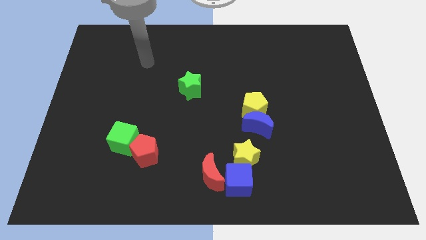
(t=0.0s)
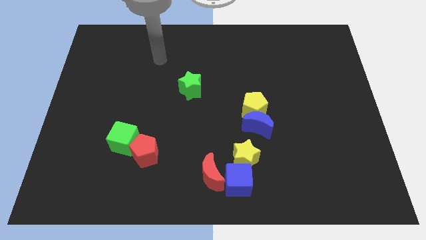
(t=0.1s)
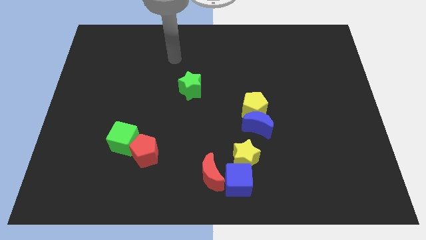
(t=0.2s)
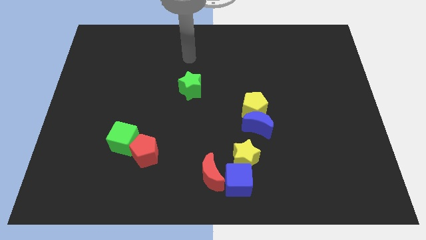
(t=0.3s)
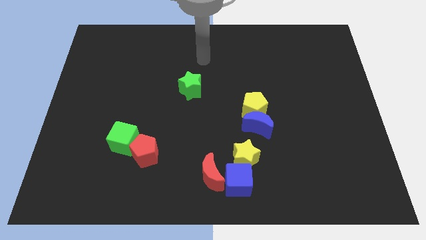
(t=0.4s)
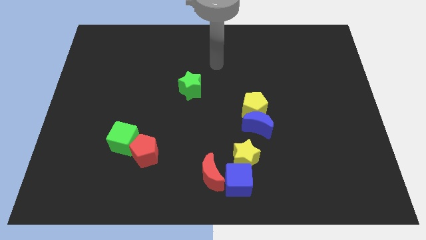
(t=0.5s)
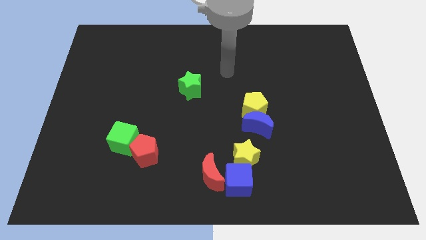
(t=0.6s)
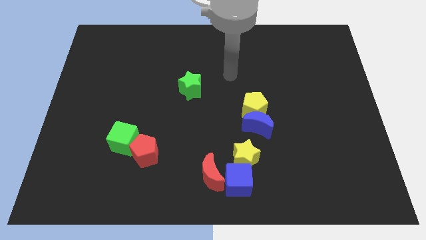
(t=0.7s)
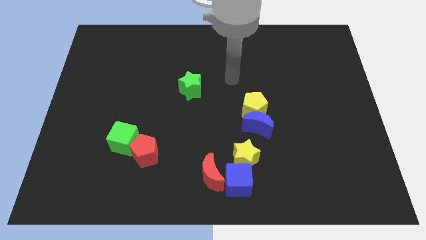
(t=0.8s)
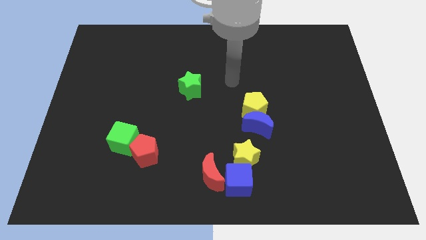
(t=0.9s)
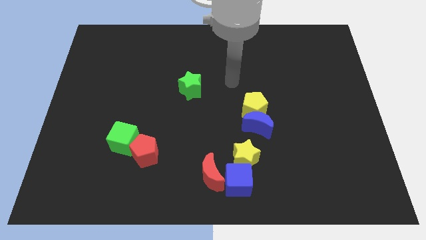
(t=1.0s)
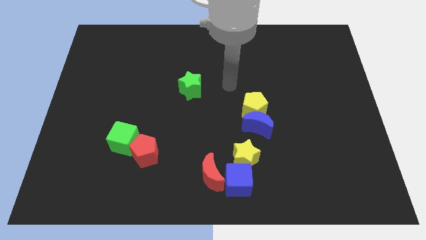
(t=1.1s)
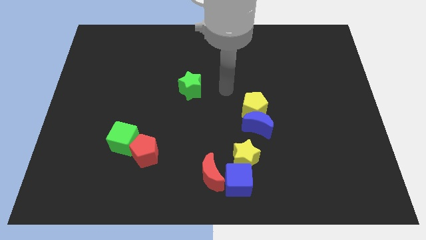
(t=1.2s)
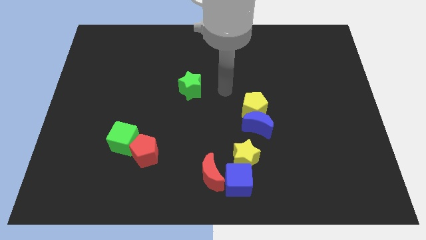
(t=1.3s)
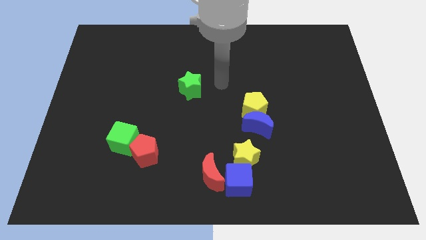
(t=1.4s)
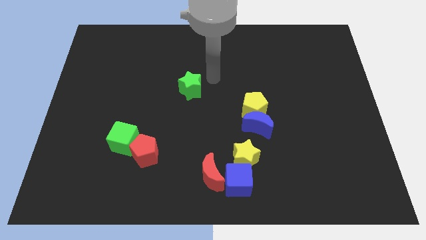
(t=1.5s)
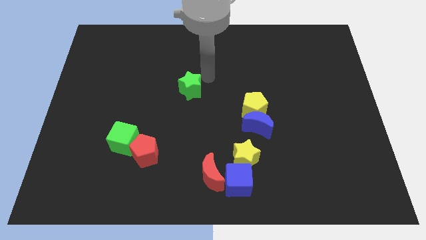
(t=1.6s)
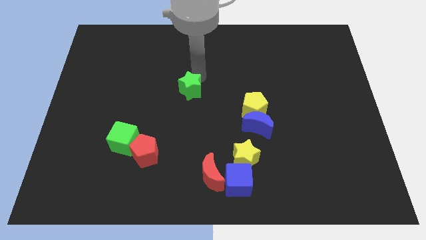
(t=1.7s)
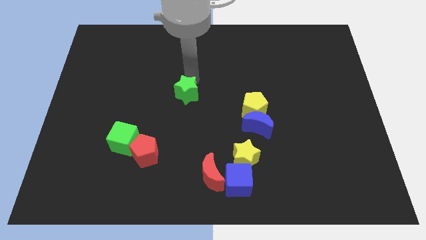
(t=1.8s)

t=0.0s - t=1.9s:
move your arm to the top side of the green star

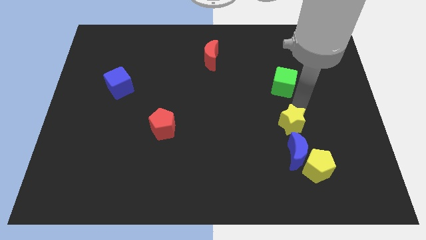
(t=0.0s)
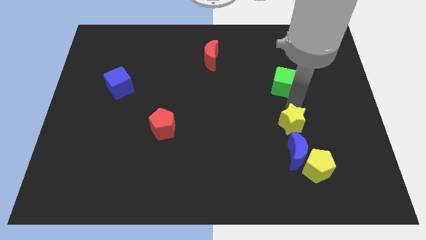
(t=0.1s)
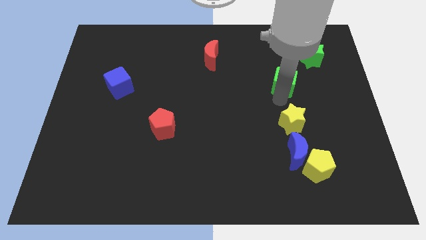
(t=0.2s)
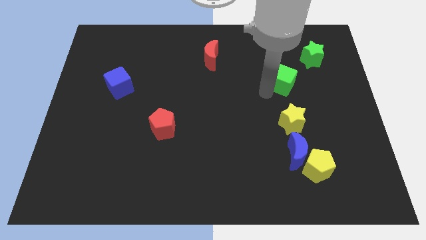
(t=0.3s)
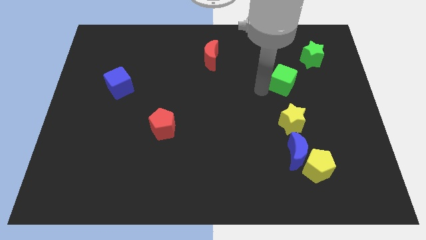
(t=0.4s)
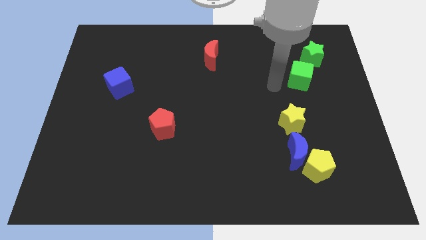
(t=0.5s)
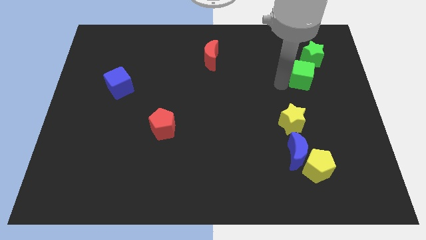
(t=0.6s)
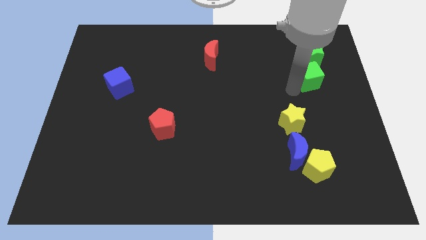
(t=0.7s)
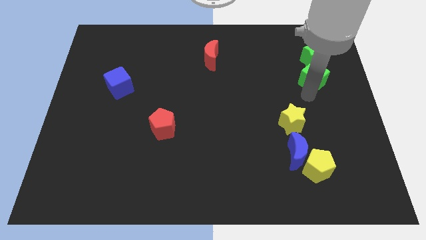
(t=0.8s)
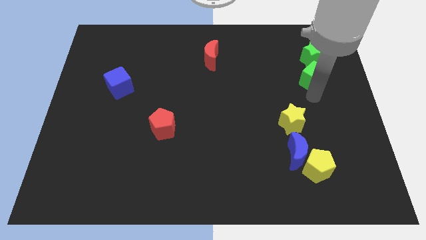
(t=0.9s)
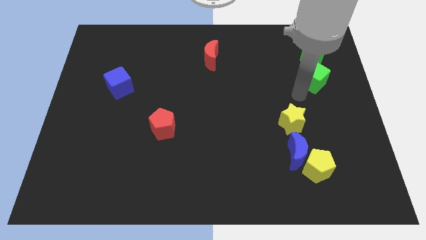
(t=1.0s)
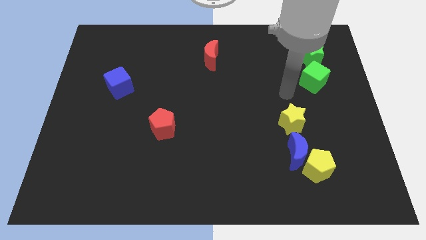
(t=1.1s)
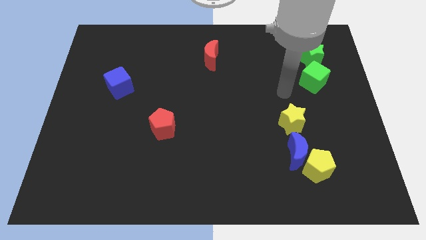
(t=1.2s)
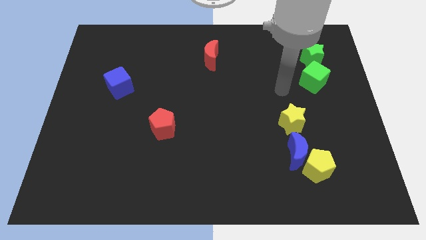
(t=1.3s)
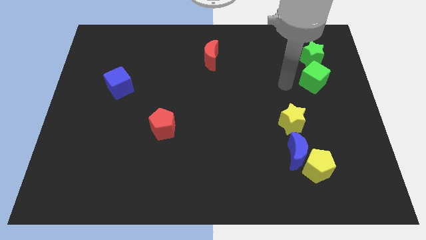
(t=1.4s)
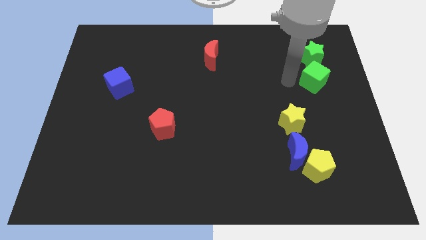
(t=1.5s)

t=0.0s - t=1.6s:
place the green cube at the bottom of the green star

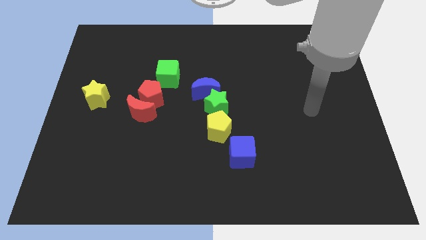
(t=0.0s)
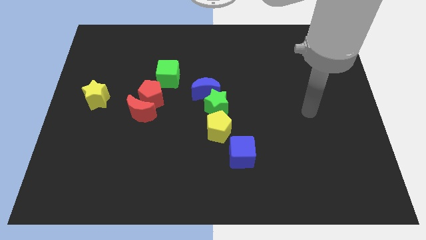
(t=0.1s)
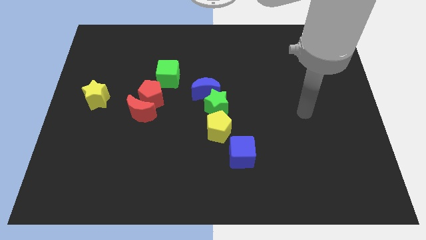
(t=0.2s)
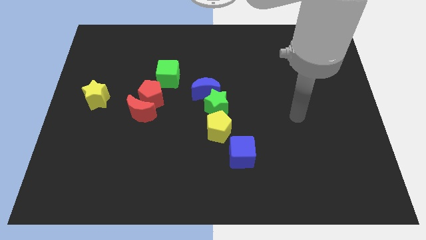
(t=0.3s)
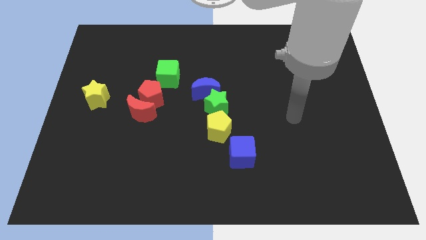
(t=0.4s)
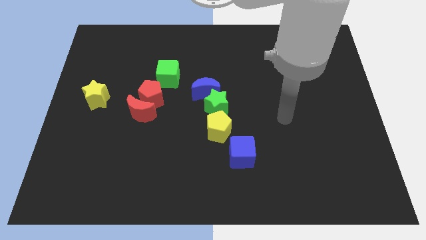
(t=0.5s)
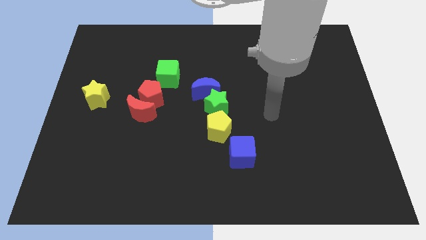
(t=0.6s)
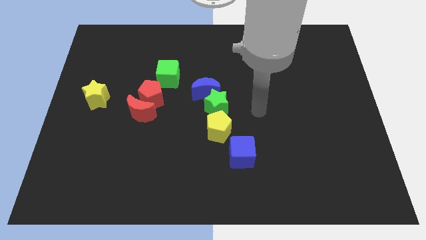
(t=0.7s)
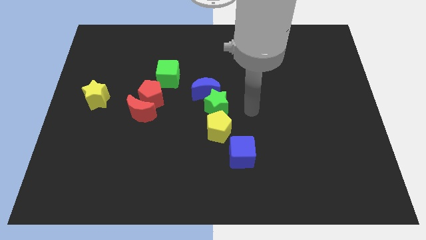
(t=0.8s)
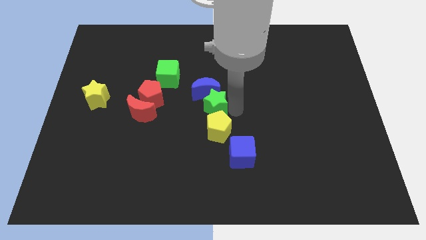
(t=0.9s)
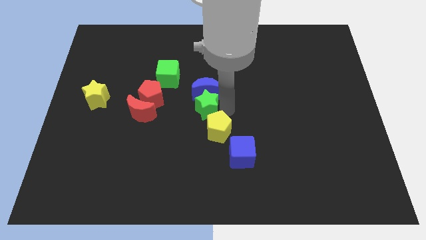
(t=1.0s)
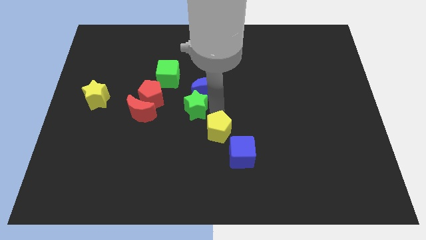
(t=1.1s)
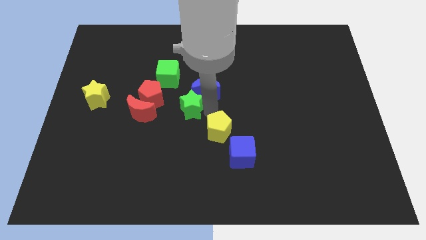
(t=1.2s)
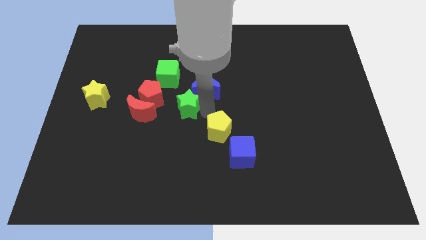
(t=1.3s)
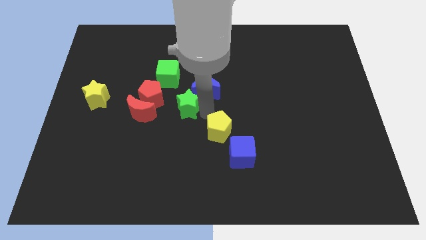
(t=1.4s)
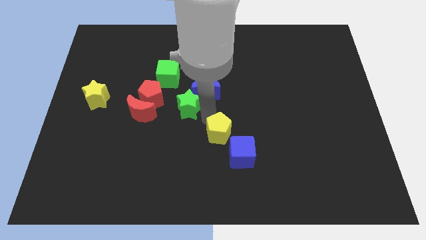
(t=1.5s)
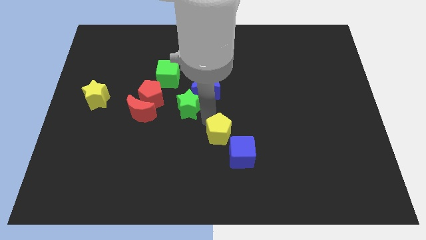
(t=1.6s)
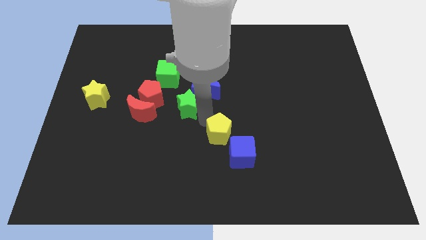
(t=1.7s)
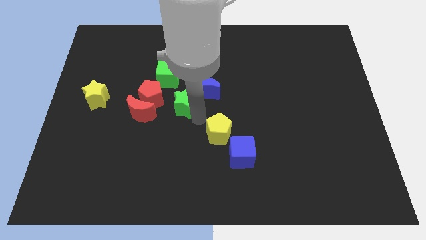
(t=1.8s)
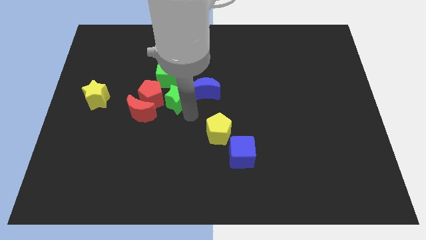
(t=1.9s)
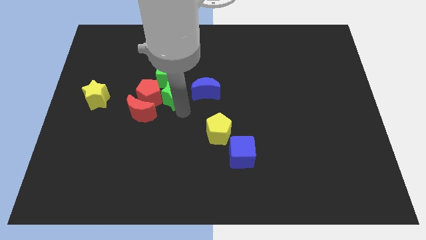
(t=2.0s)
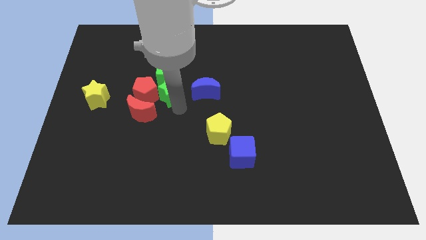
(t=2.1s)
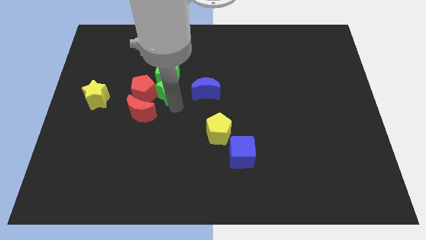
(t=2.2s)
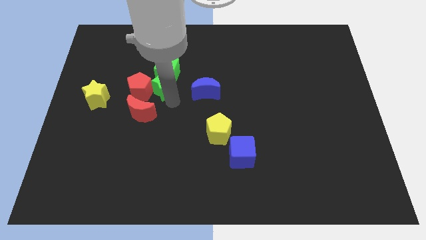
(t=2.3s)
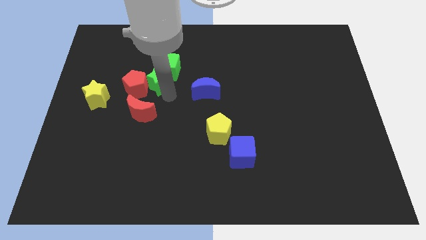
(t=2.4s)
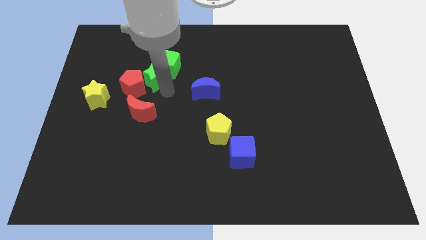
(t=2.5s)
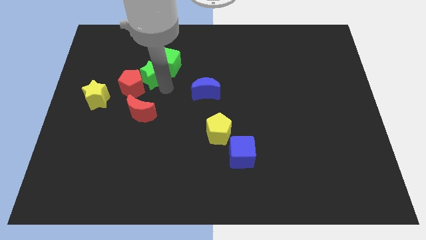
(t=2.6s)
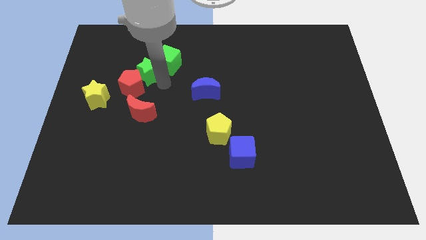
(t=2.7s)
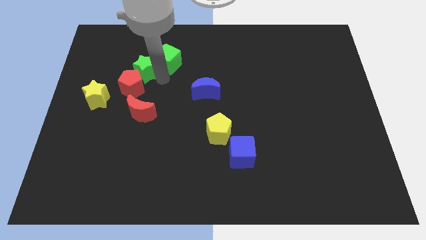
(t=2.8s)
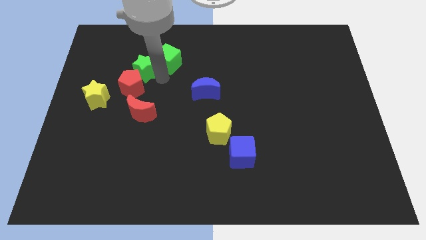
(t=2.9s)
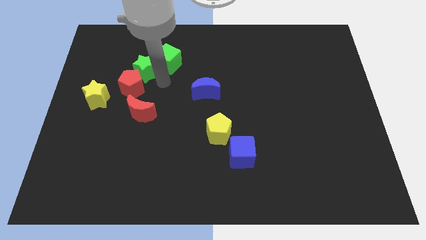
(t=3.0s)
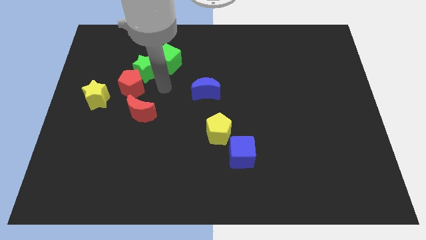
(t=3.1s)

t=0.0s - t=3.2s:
push the green star in between the green cube and red pentagon

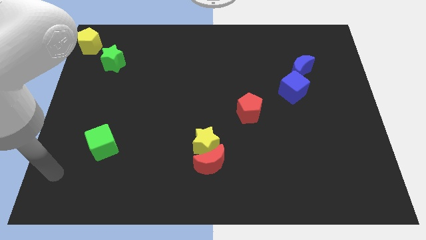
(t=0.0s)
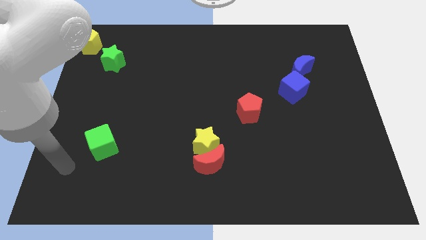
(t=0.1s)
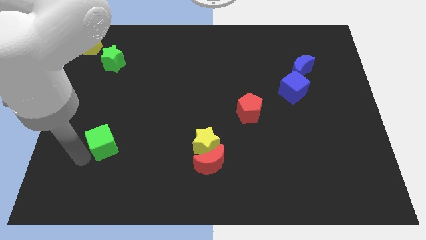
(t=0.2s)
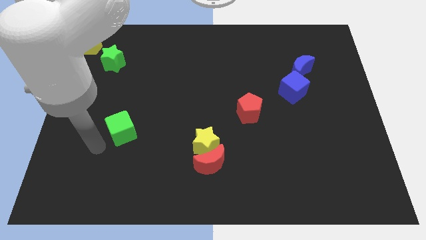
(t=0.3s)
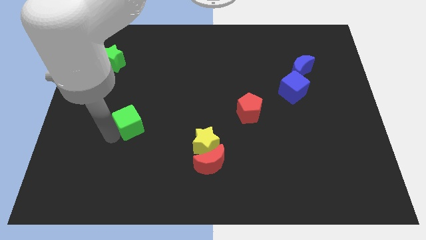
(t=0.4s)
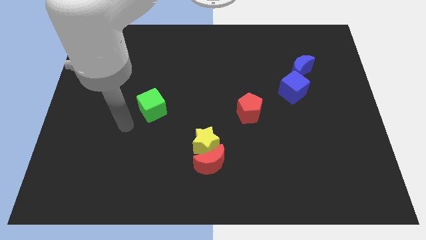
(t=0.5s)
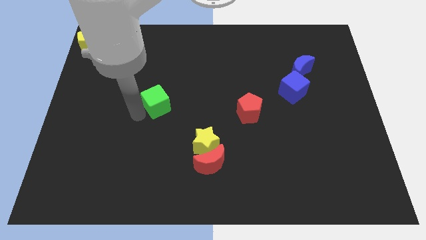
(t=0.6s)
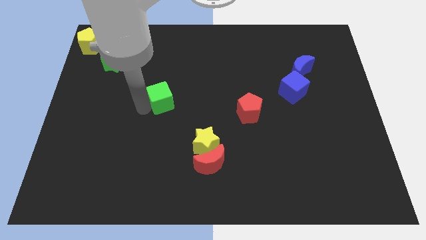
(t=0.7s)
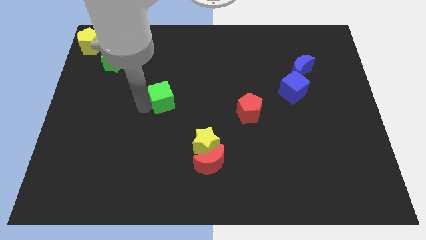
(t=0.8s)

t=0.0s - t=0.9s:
move the green cube towards the center of the board

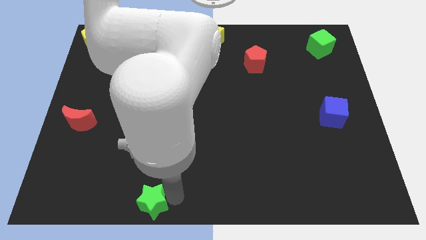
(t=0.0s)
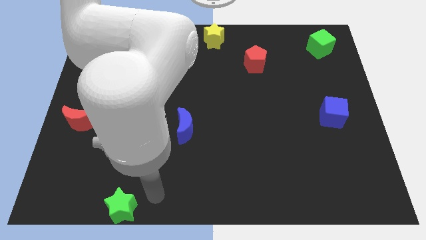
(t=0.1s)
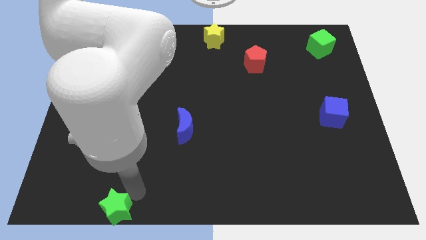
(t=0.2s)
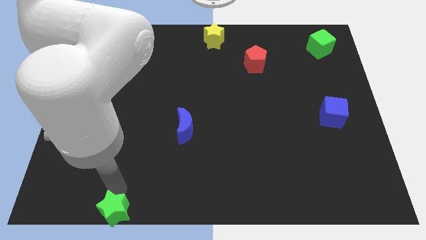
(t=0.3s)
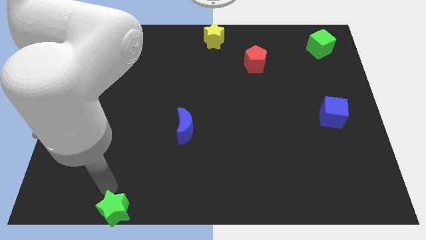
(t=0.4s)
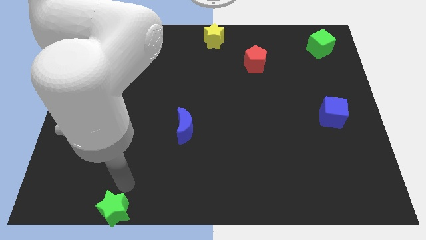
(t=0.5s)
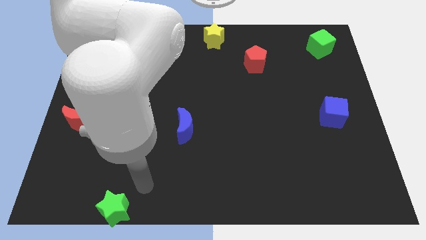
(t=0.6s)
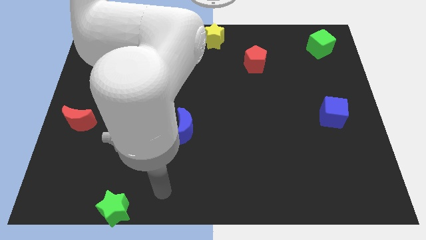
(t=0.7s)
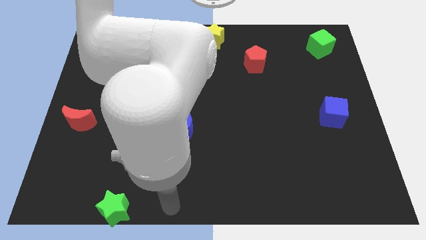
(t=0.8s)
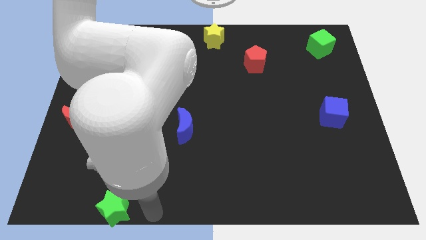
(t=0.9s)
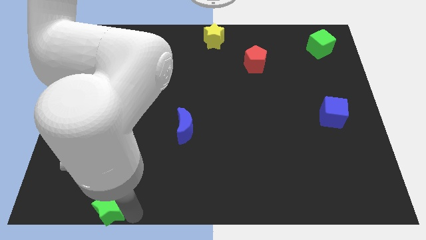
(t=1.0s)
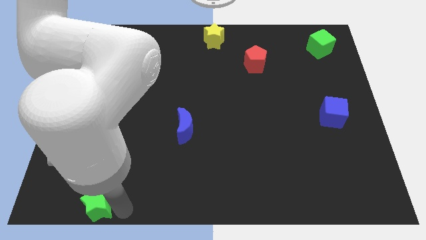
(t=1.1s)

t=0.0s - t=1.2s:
move the green star to the left of the board

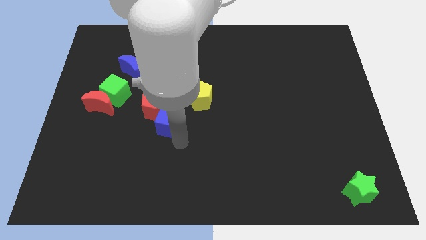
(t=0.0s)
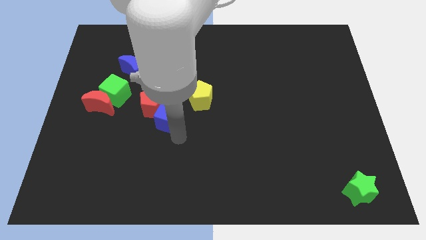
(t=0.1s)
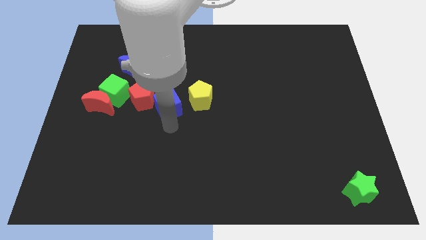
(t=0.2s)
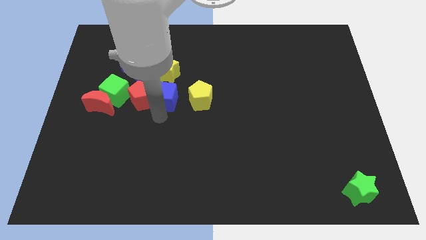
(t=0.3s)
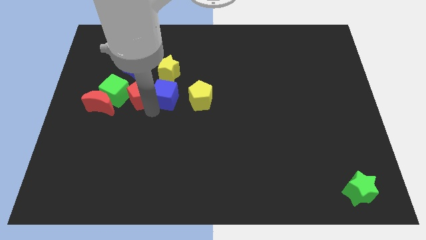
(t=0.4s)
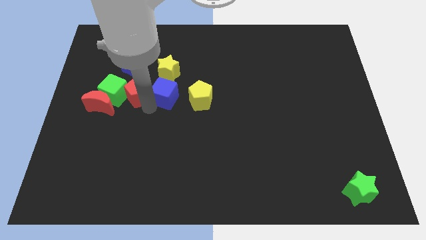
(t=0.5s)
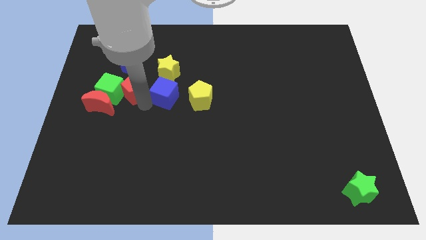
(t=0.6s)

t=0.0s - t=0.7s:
place the red pentagon right to the green cube
